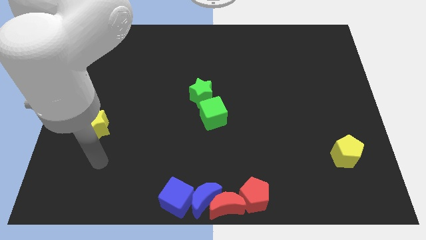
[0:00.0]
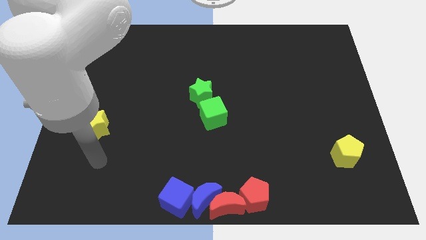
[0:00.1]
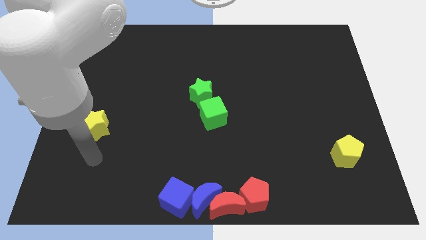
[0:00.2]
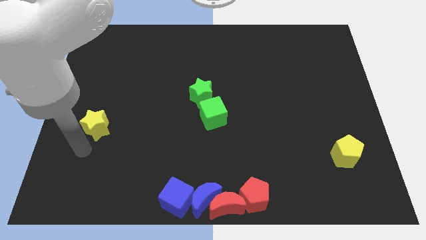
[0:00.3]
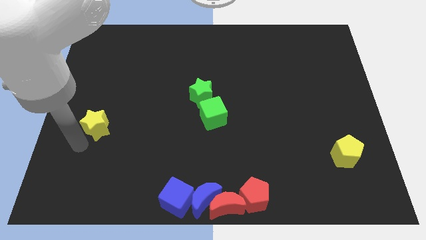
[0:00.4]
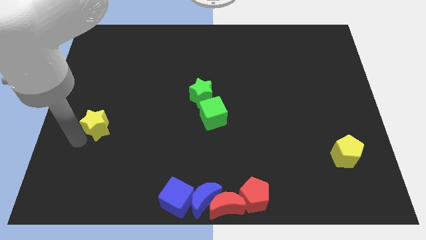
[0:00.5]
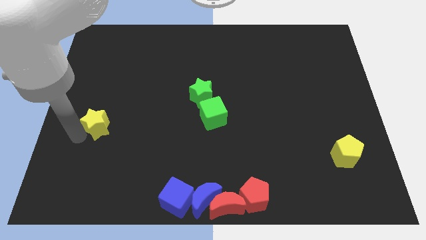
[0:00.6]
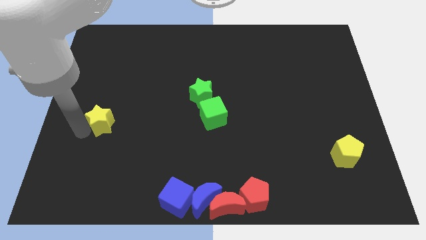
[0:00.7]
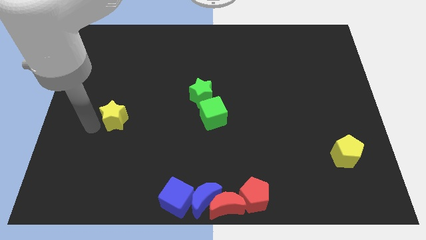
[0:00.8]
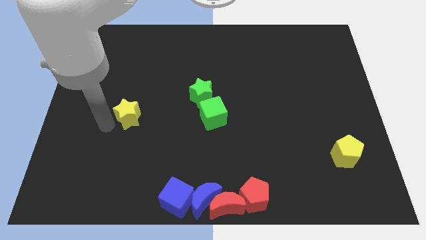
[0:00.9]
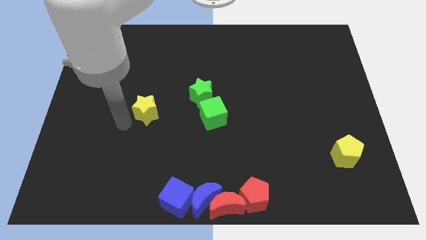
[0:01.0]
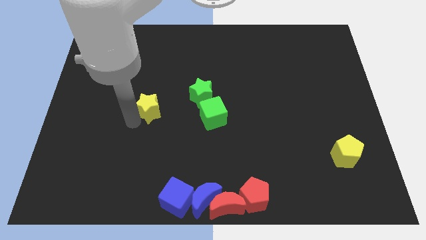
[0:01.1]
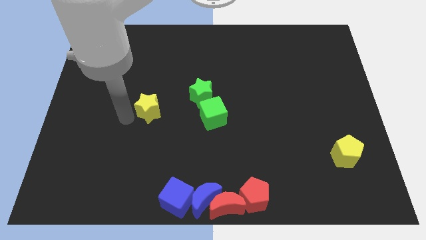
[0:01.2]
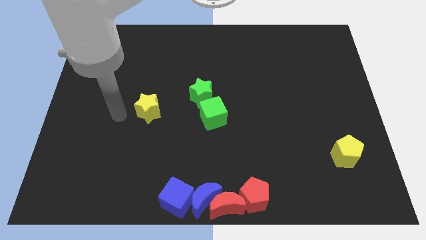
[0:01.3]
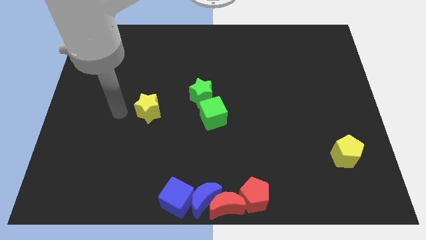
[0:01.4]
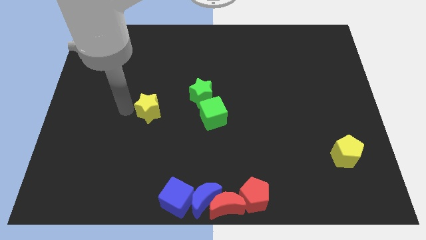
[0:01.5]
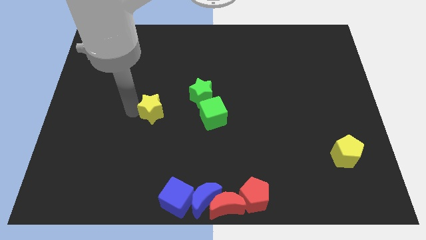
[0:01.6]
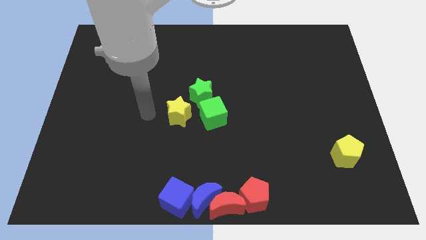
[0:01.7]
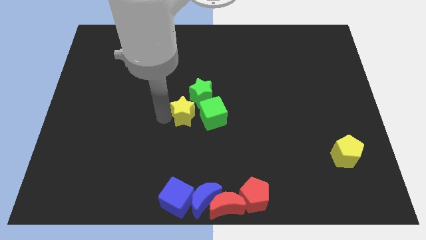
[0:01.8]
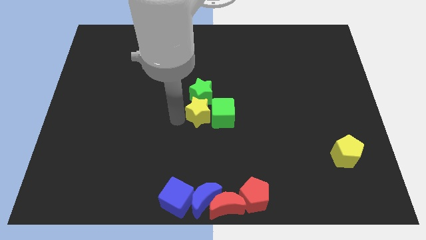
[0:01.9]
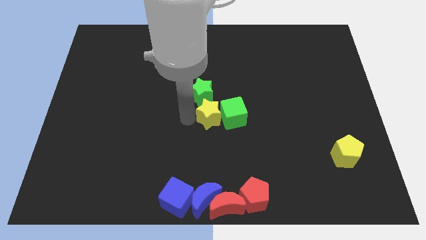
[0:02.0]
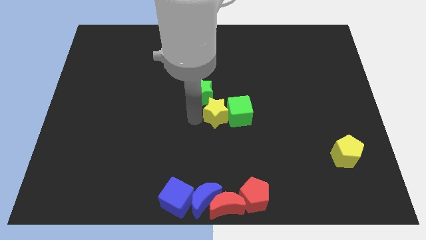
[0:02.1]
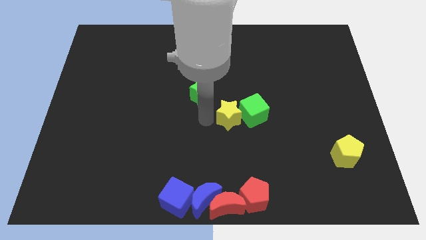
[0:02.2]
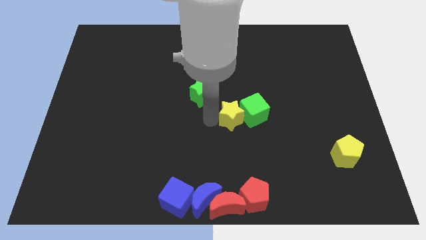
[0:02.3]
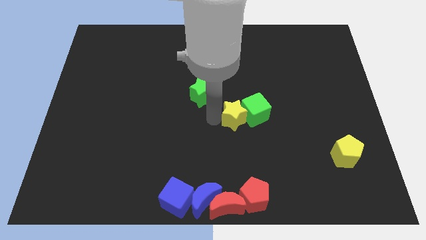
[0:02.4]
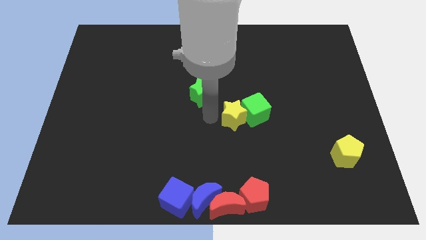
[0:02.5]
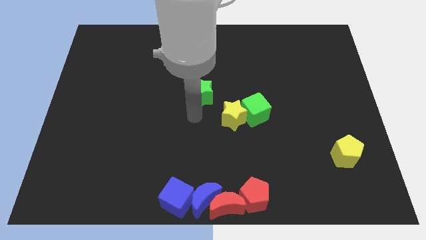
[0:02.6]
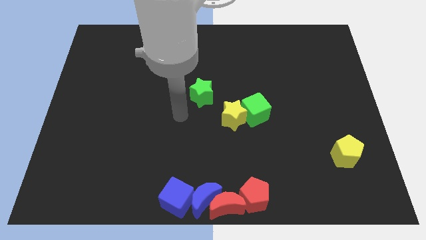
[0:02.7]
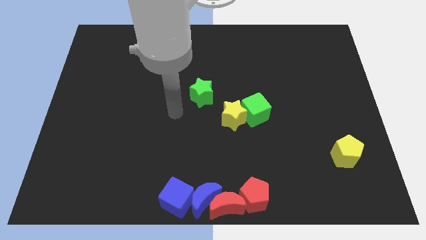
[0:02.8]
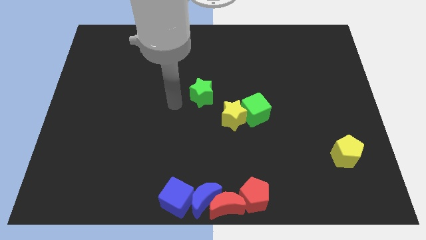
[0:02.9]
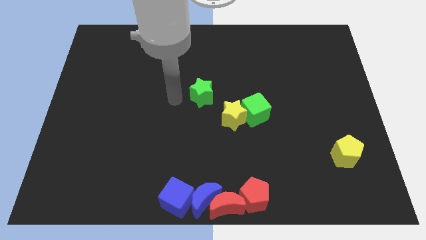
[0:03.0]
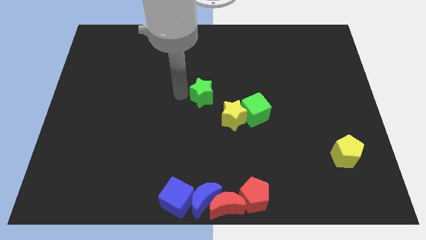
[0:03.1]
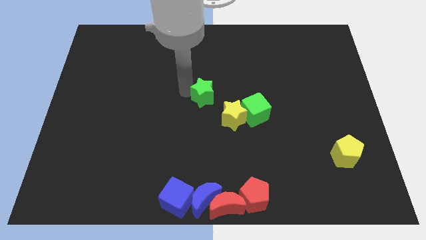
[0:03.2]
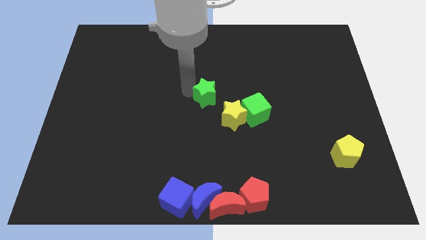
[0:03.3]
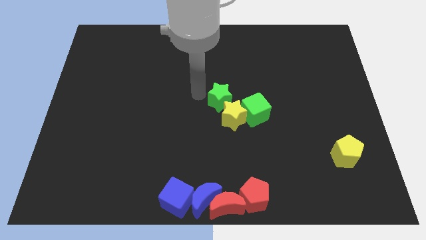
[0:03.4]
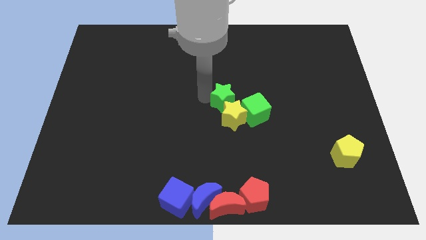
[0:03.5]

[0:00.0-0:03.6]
move the green cube and yellow star towards the right of the board

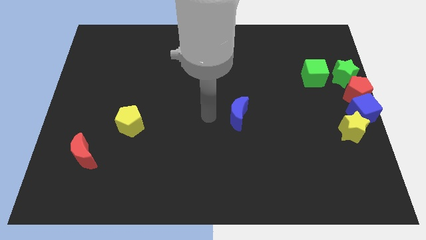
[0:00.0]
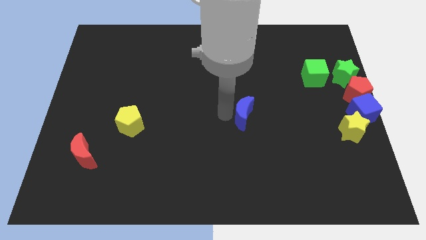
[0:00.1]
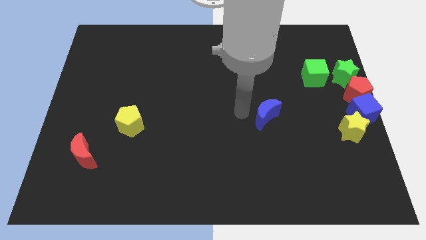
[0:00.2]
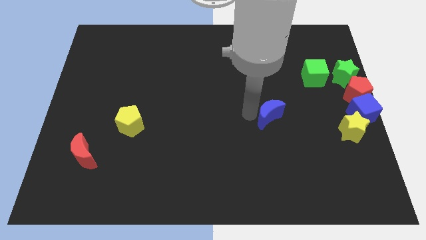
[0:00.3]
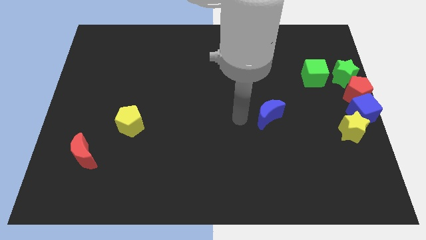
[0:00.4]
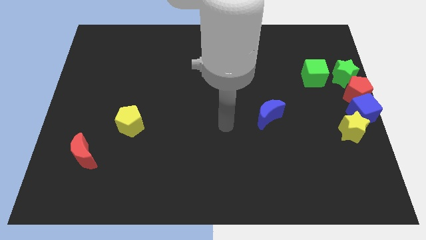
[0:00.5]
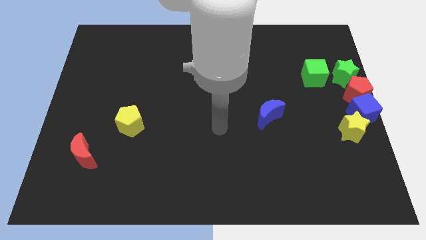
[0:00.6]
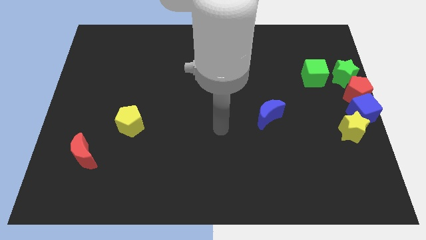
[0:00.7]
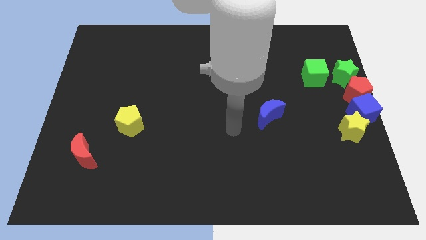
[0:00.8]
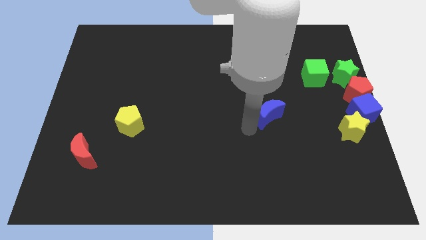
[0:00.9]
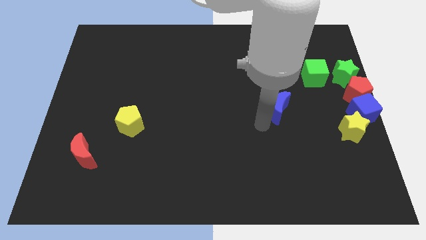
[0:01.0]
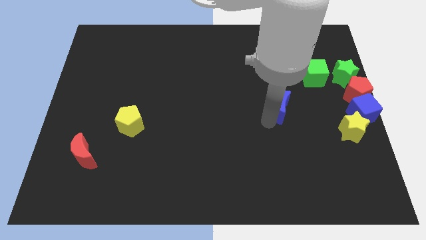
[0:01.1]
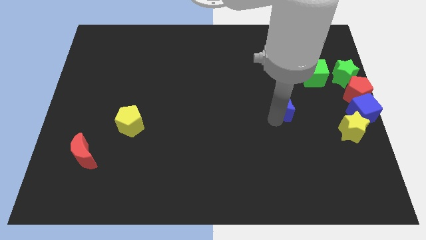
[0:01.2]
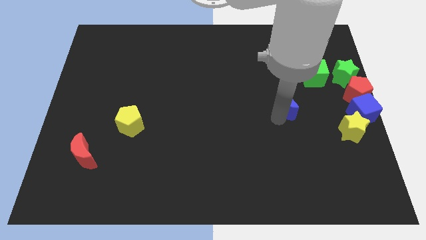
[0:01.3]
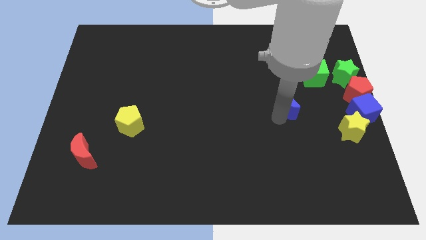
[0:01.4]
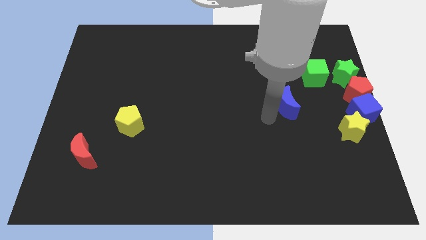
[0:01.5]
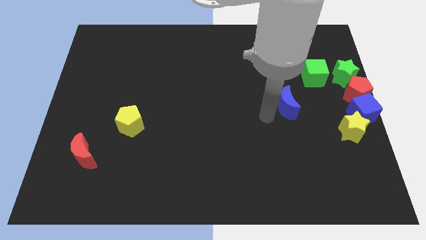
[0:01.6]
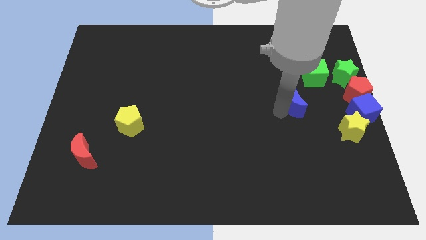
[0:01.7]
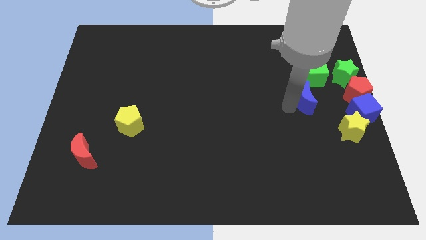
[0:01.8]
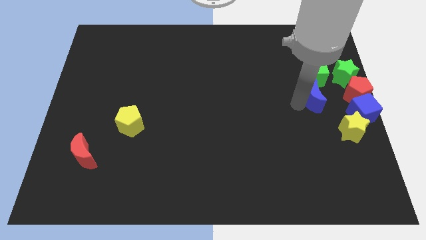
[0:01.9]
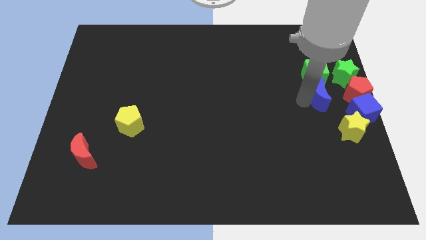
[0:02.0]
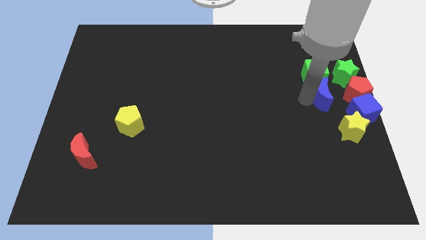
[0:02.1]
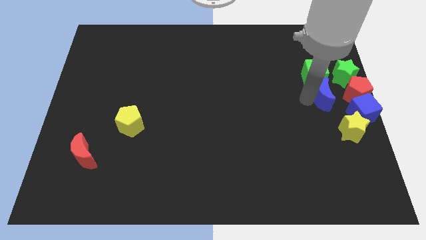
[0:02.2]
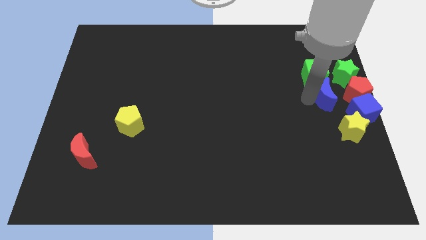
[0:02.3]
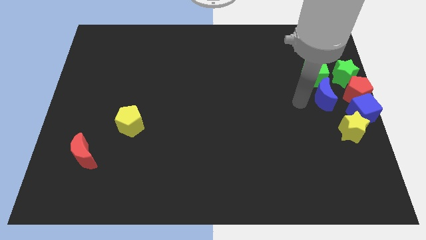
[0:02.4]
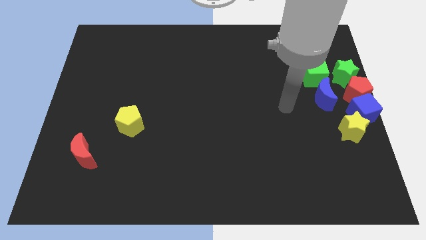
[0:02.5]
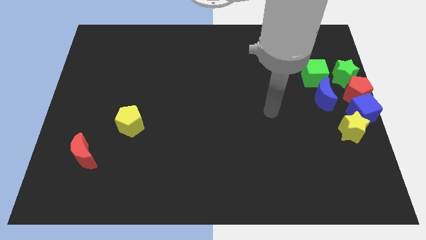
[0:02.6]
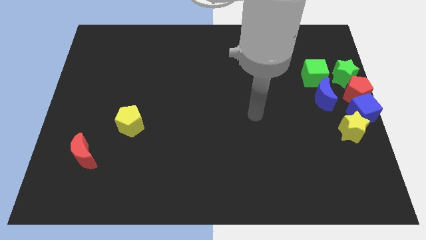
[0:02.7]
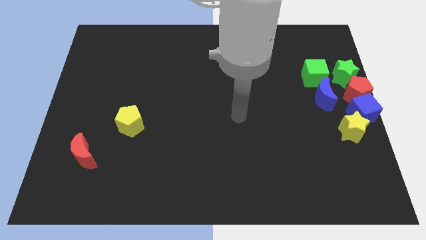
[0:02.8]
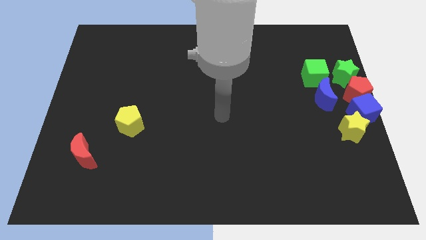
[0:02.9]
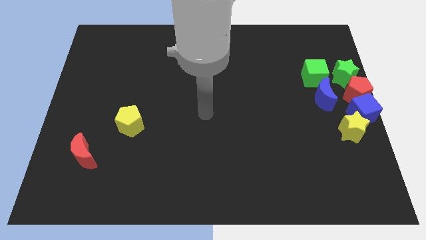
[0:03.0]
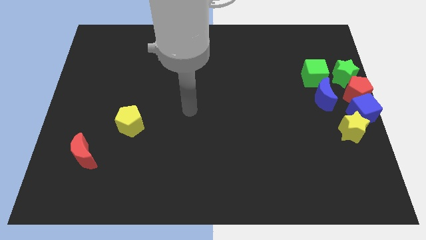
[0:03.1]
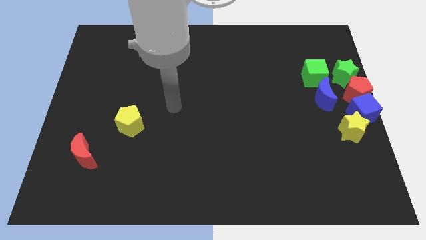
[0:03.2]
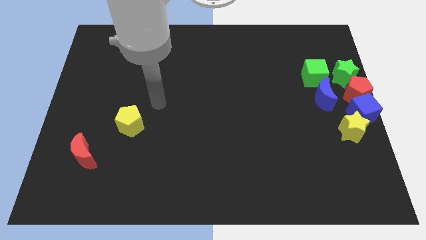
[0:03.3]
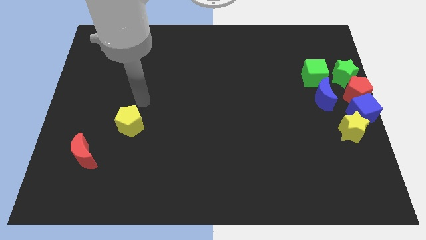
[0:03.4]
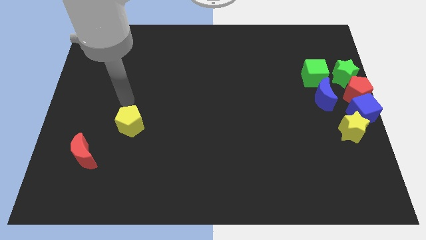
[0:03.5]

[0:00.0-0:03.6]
place the blue crescent to the bottom of the green cube

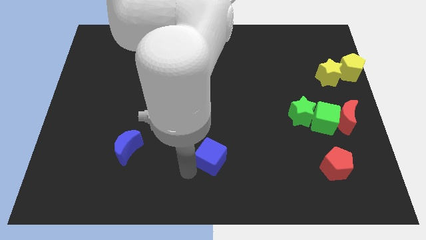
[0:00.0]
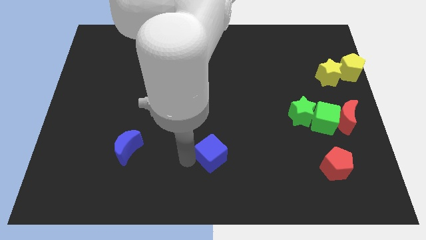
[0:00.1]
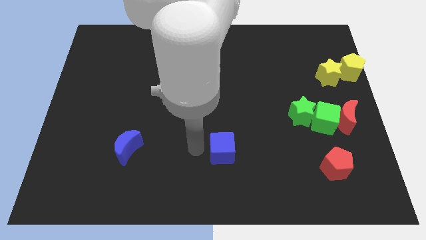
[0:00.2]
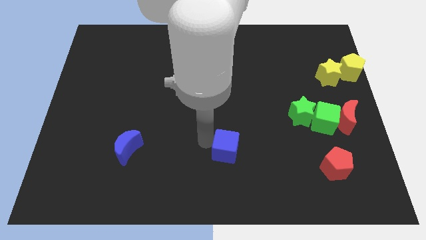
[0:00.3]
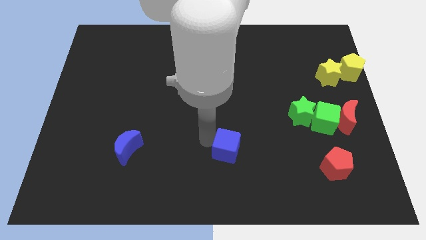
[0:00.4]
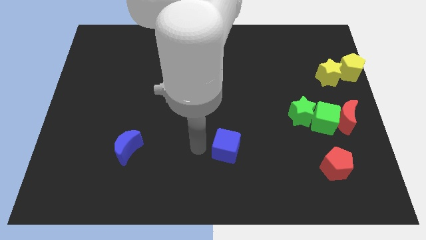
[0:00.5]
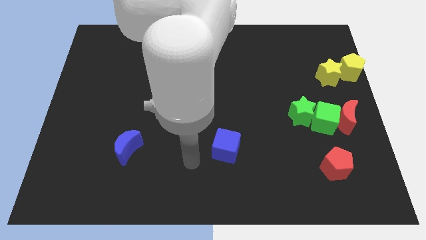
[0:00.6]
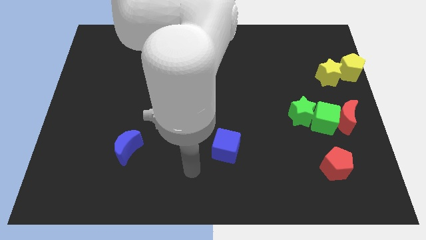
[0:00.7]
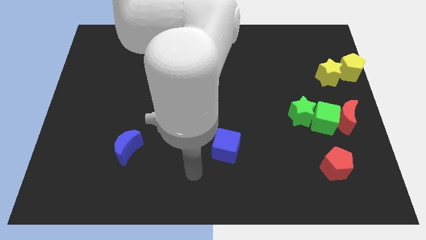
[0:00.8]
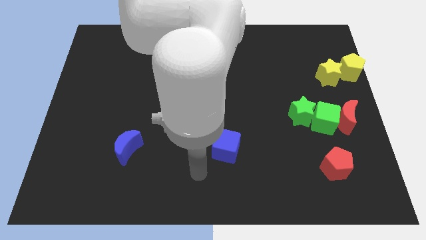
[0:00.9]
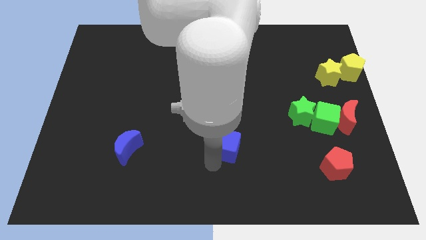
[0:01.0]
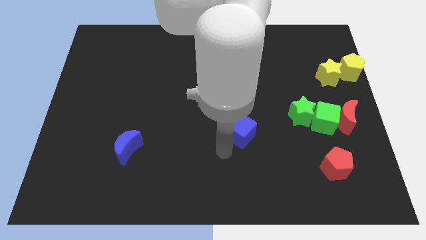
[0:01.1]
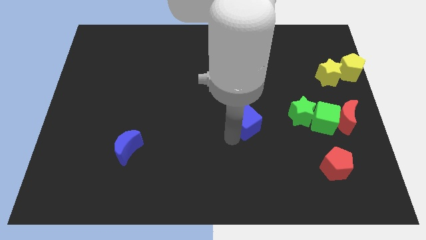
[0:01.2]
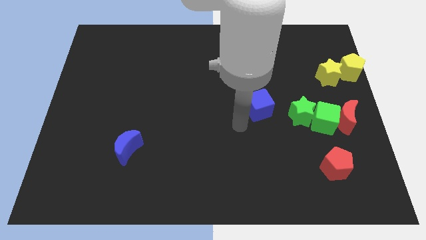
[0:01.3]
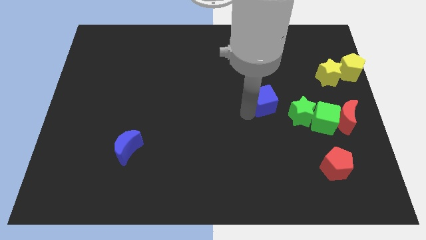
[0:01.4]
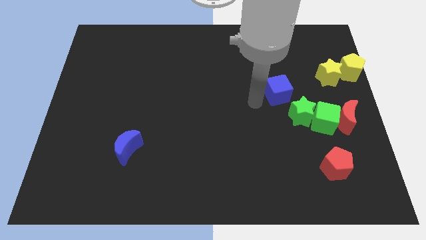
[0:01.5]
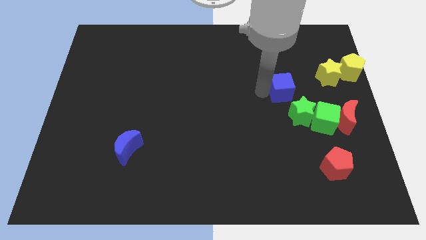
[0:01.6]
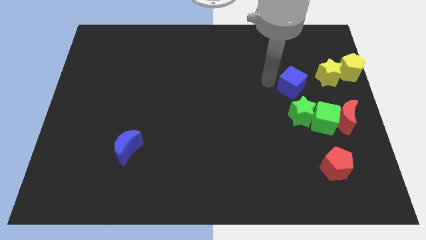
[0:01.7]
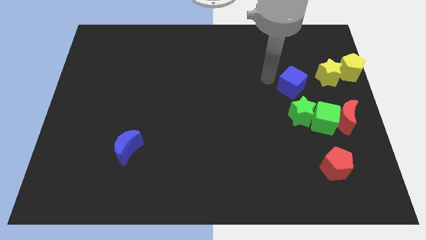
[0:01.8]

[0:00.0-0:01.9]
move the blue cube diagonally to blue crescent
